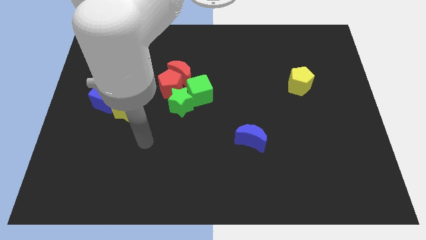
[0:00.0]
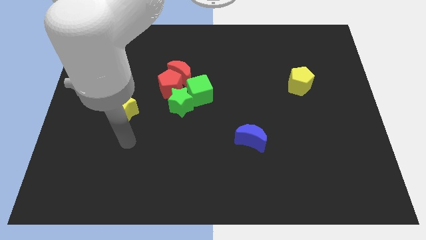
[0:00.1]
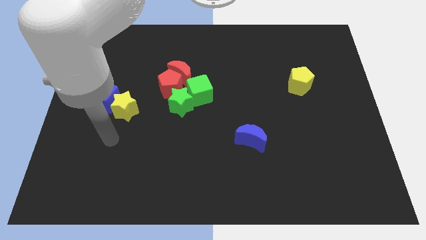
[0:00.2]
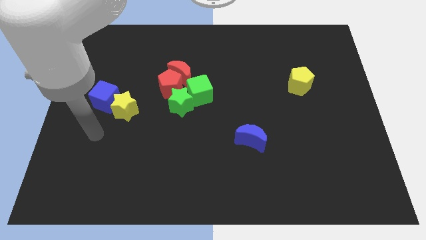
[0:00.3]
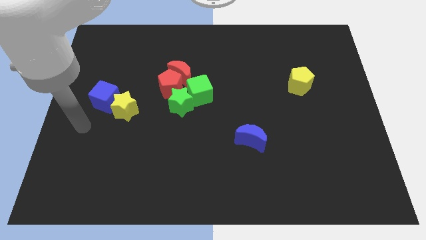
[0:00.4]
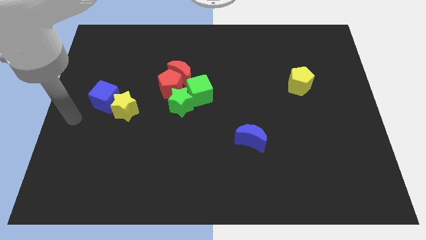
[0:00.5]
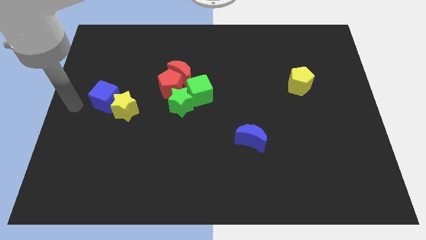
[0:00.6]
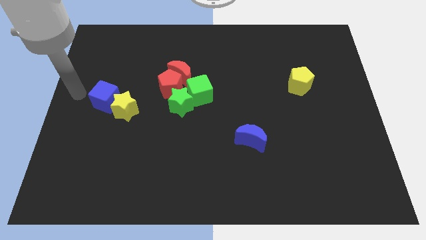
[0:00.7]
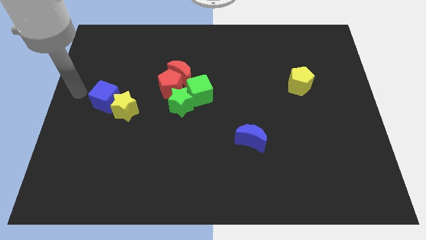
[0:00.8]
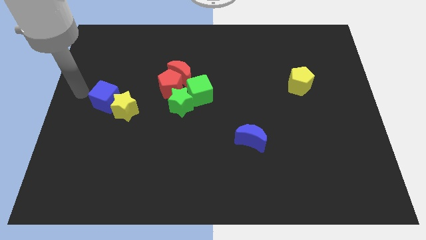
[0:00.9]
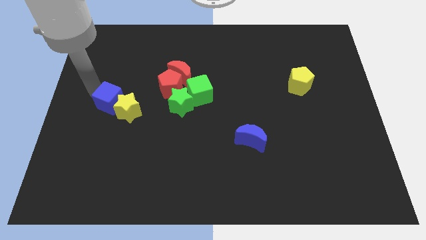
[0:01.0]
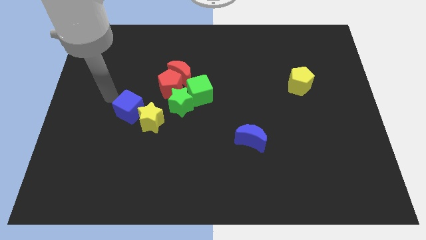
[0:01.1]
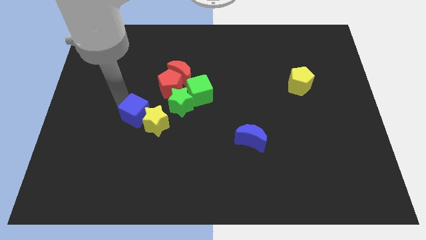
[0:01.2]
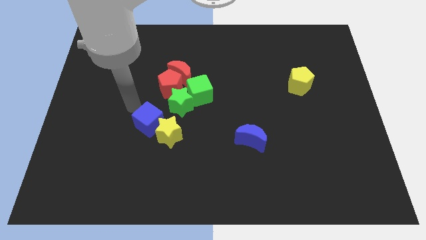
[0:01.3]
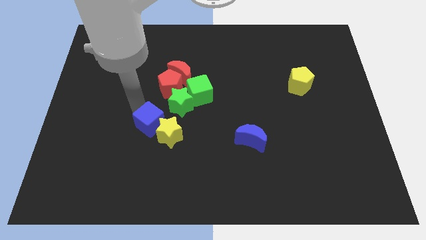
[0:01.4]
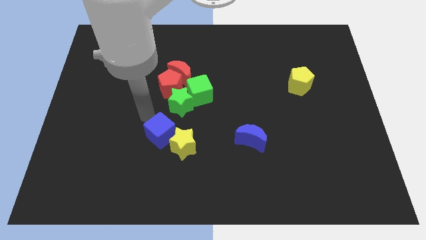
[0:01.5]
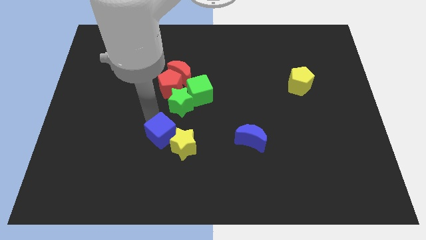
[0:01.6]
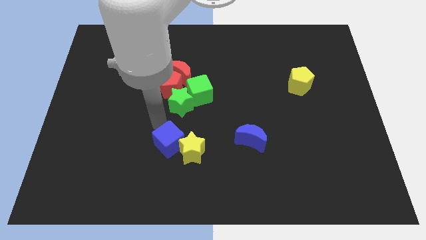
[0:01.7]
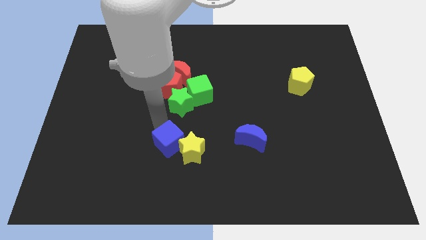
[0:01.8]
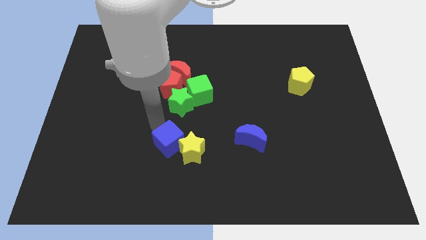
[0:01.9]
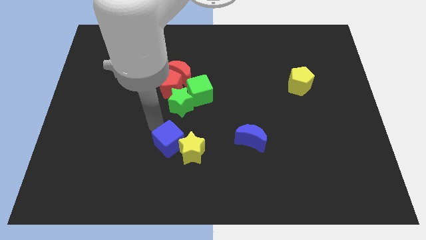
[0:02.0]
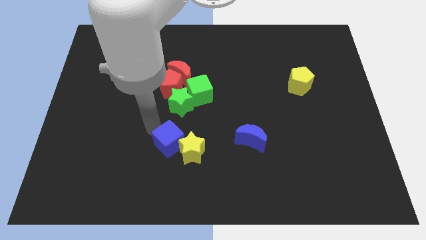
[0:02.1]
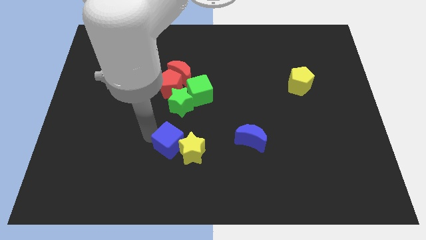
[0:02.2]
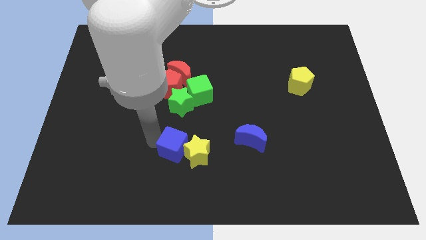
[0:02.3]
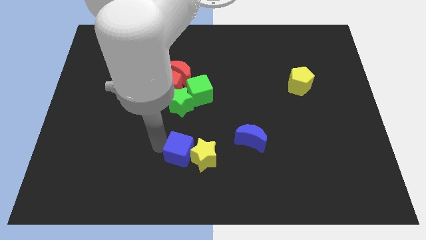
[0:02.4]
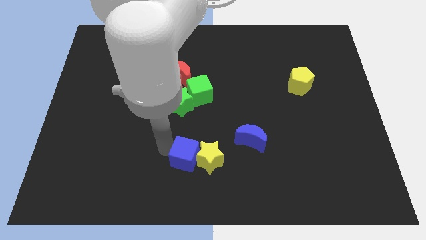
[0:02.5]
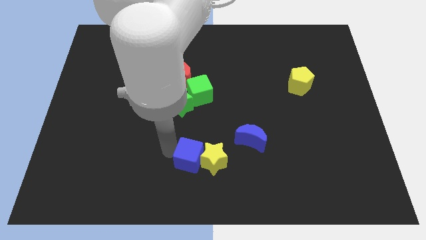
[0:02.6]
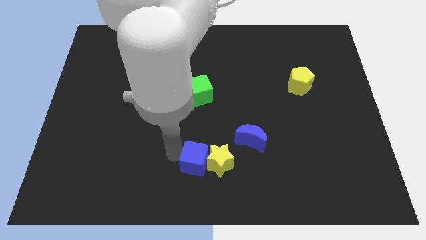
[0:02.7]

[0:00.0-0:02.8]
move the blue cube along with the yellow star diagonally left of the blue crescent

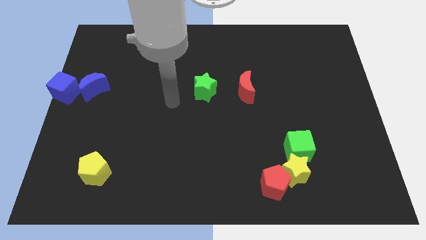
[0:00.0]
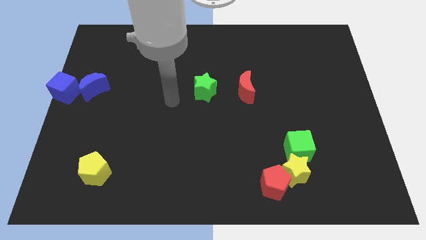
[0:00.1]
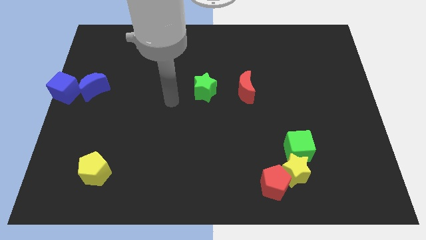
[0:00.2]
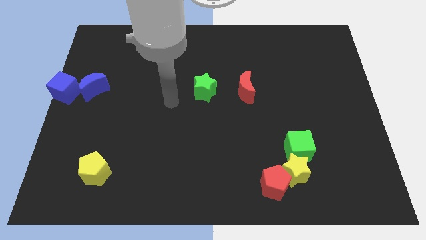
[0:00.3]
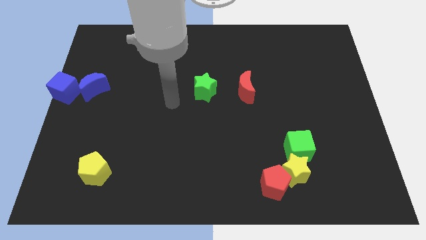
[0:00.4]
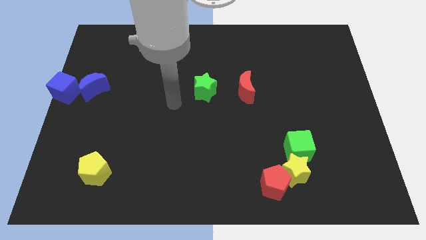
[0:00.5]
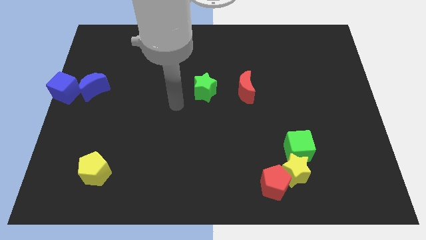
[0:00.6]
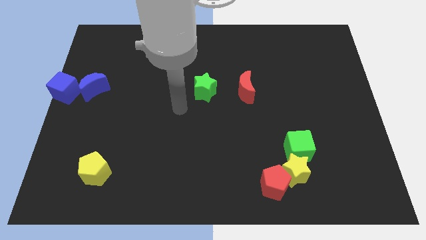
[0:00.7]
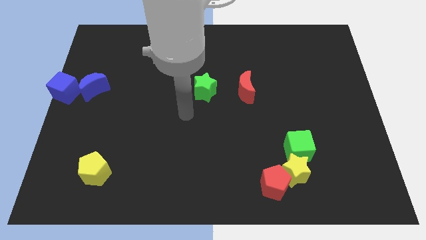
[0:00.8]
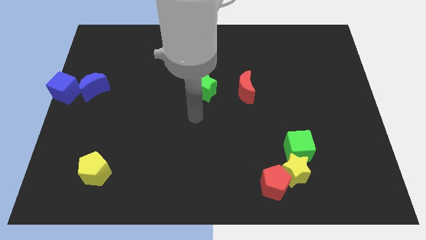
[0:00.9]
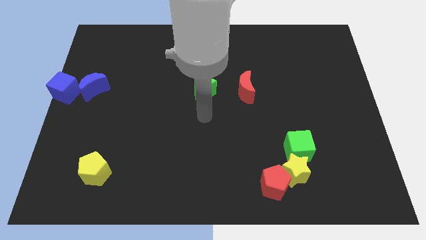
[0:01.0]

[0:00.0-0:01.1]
place arm below green star

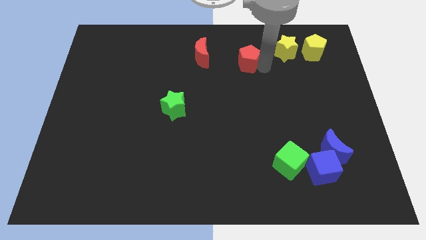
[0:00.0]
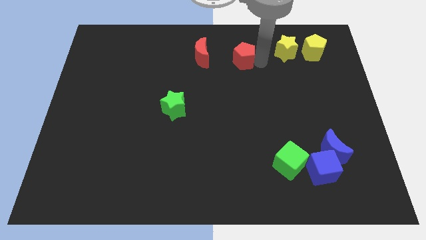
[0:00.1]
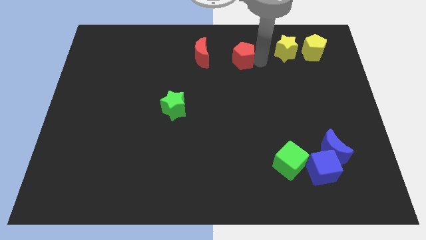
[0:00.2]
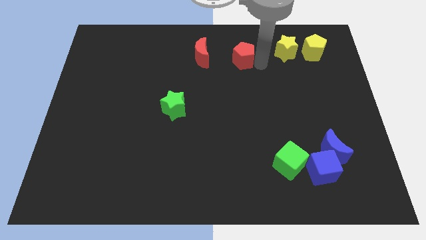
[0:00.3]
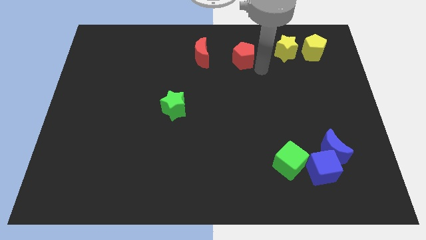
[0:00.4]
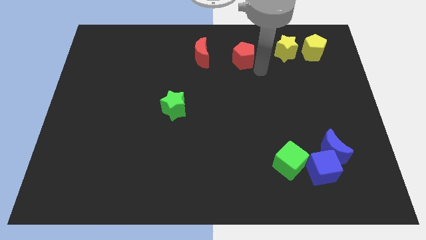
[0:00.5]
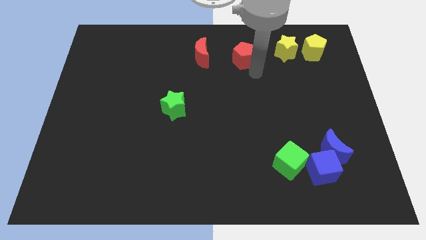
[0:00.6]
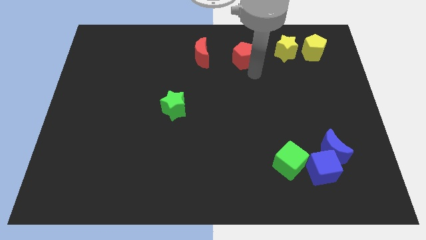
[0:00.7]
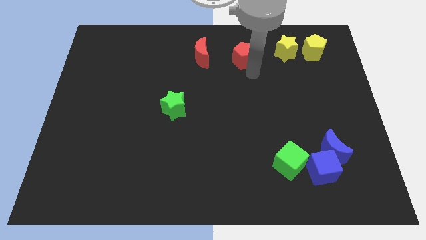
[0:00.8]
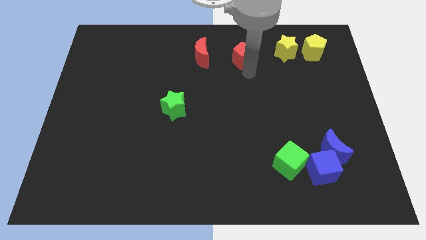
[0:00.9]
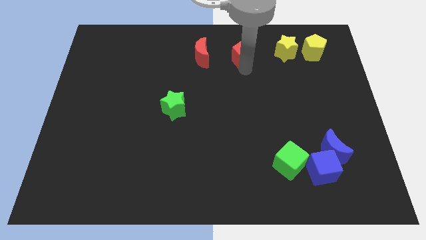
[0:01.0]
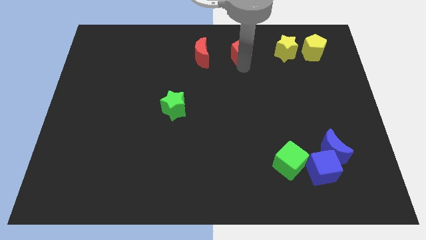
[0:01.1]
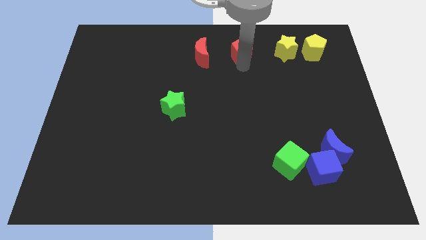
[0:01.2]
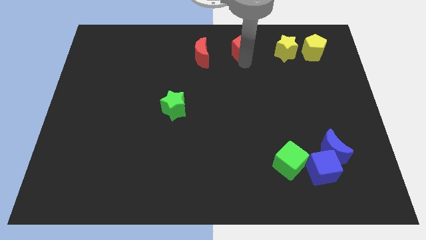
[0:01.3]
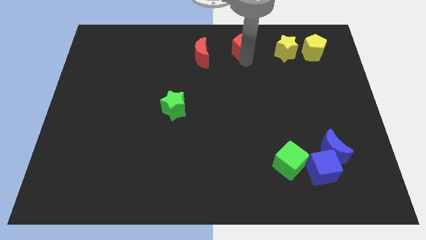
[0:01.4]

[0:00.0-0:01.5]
place red pentagon parallel to red moon

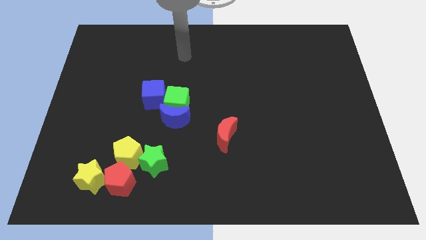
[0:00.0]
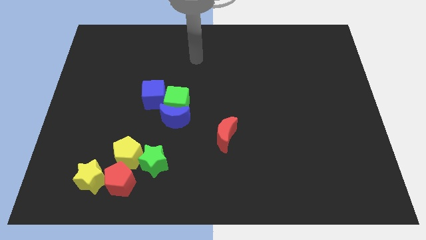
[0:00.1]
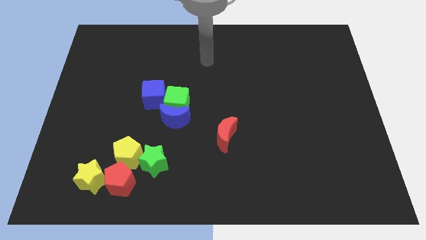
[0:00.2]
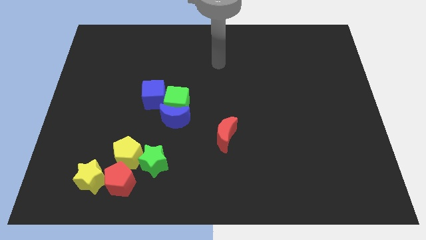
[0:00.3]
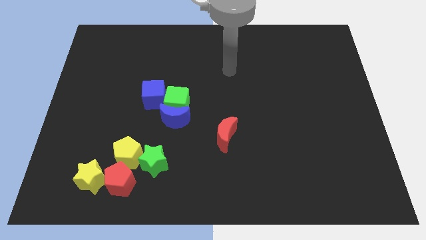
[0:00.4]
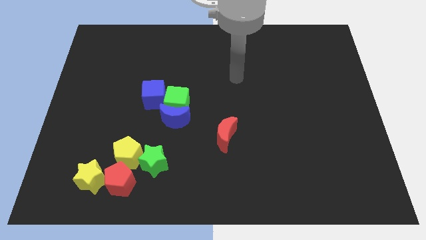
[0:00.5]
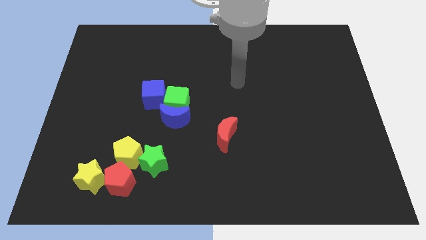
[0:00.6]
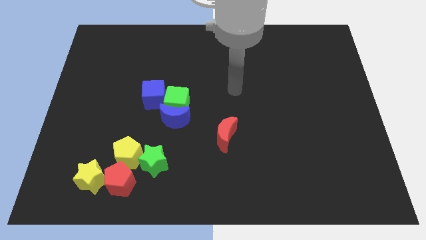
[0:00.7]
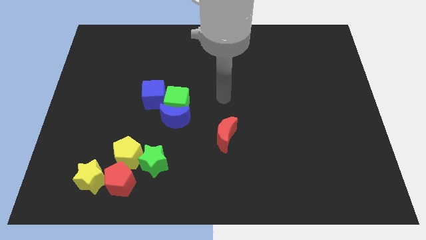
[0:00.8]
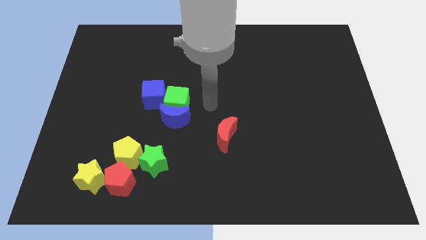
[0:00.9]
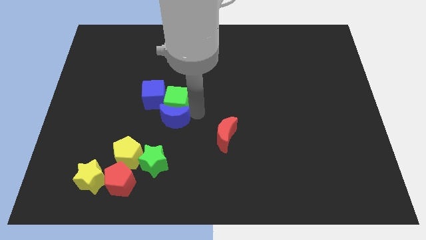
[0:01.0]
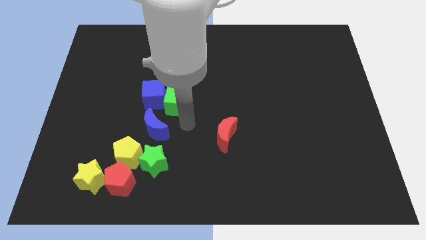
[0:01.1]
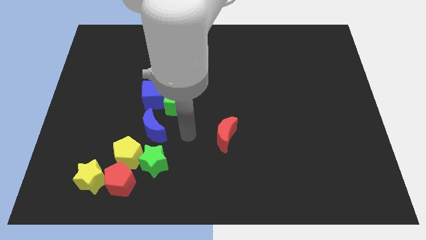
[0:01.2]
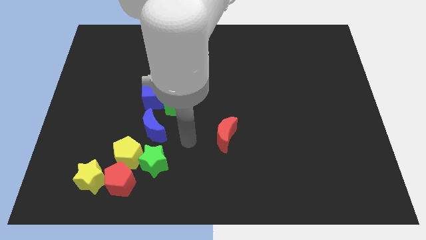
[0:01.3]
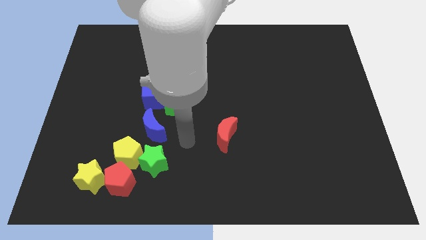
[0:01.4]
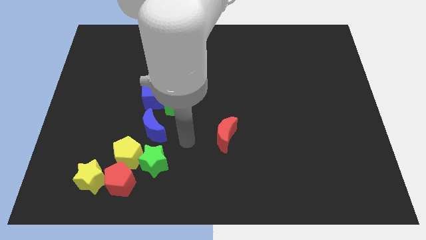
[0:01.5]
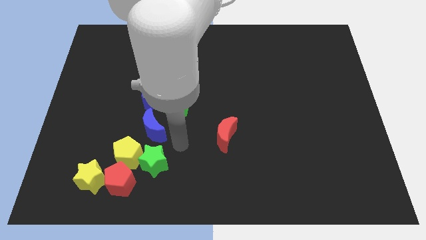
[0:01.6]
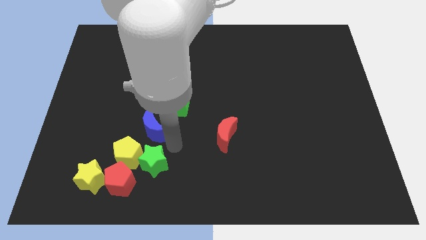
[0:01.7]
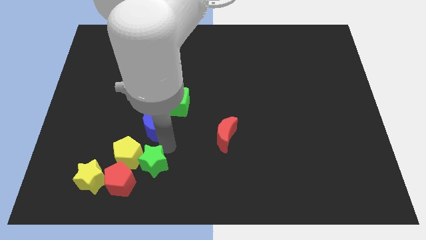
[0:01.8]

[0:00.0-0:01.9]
separate the blue crescent from the green cube

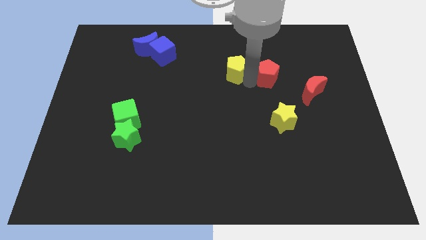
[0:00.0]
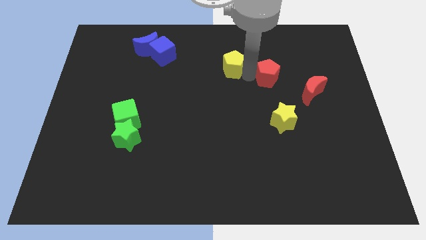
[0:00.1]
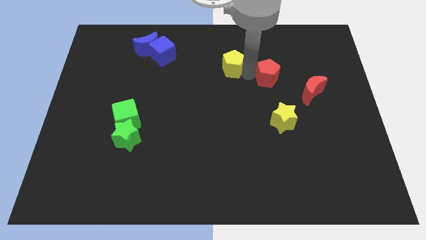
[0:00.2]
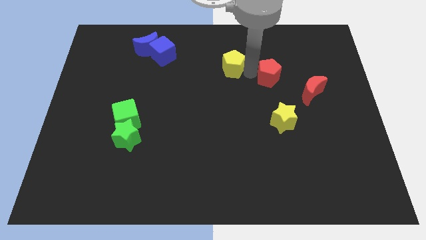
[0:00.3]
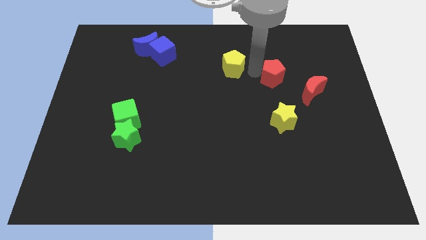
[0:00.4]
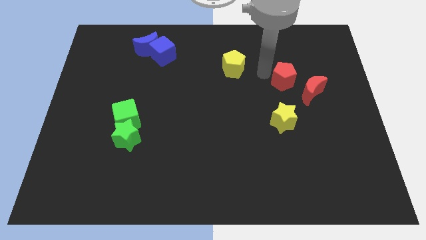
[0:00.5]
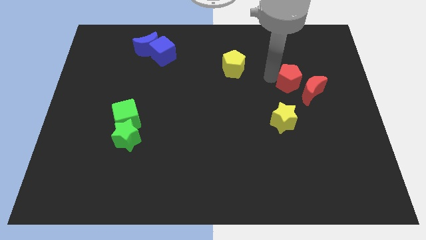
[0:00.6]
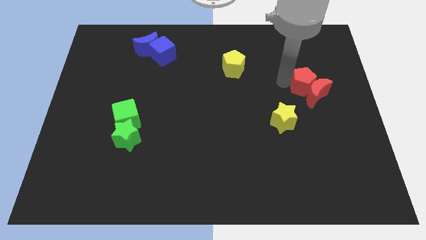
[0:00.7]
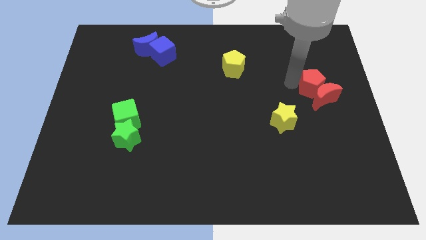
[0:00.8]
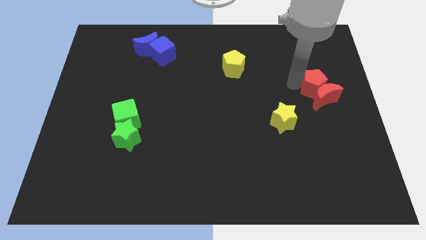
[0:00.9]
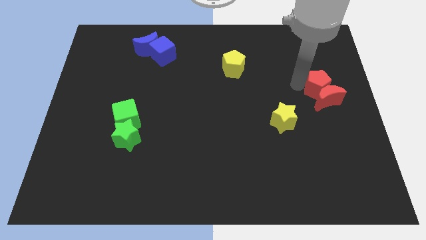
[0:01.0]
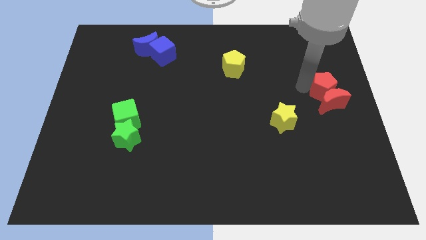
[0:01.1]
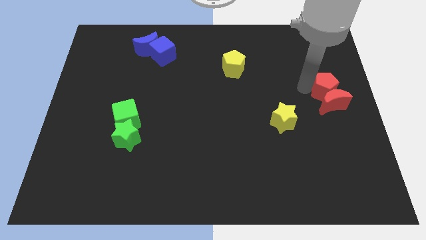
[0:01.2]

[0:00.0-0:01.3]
push the red pentagon into the red crescent

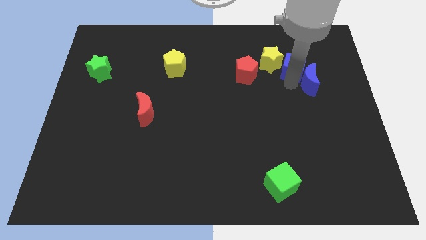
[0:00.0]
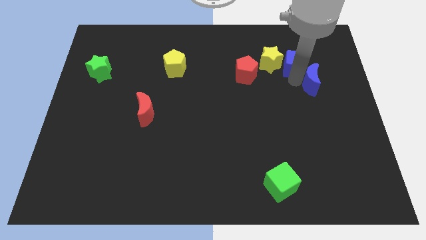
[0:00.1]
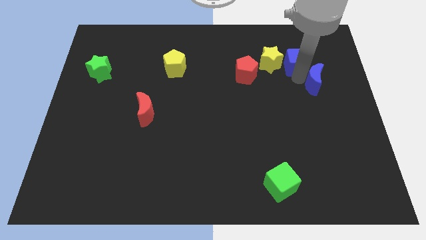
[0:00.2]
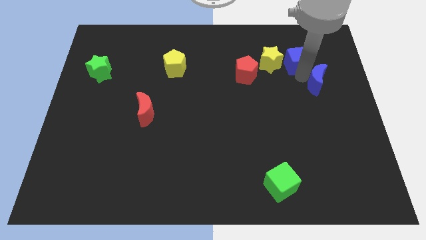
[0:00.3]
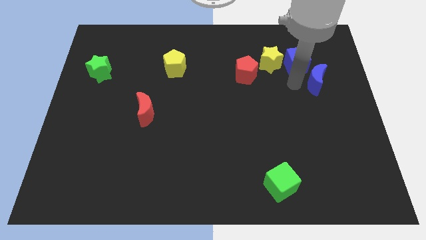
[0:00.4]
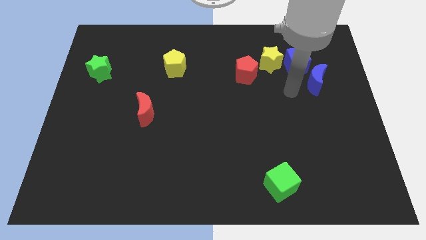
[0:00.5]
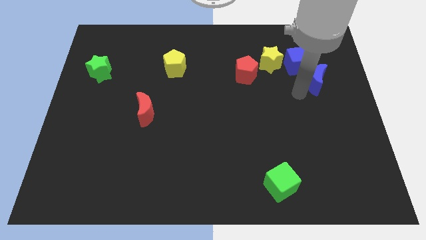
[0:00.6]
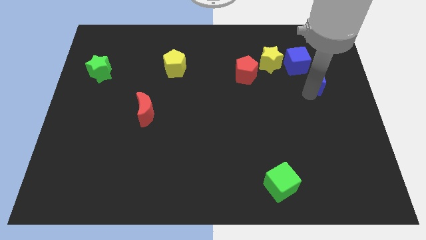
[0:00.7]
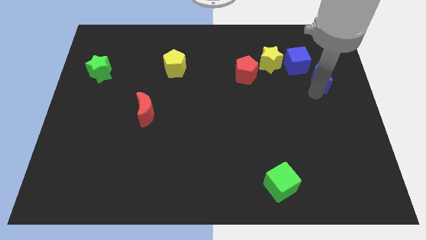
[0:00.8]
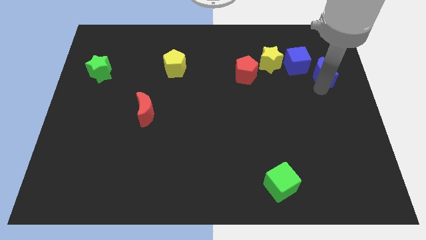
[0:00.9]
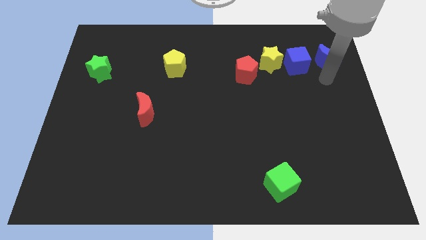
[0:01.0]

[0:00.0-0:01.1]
place blue moon to the right of blue cube
